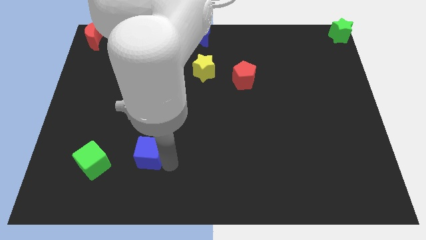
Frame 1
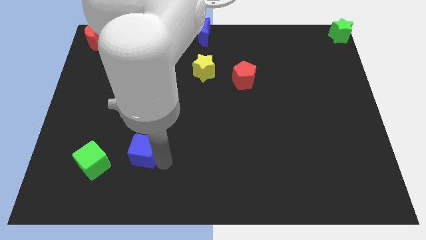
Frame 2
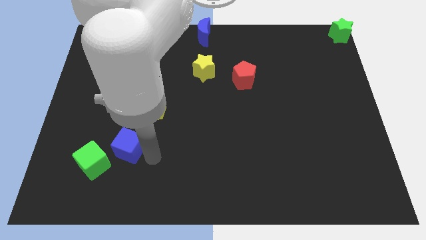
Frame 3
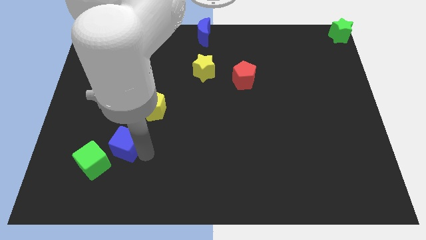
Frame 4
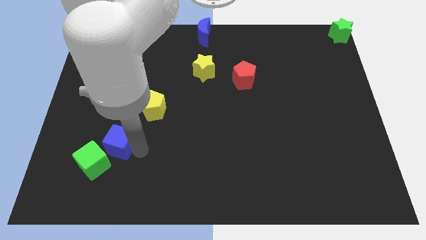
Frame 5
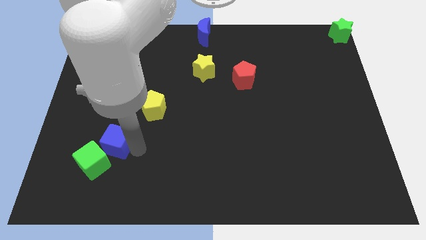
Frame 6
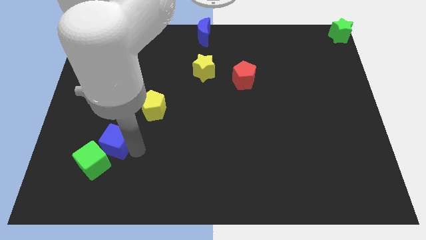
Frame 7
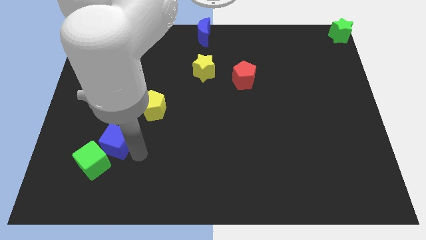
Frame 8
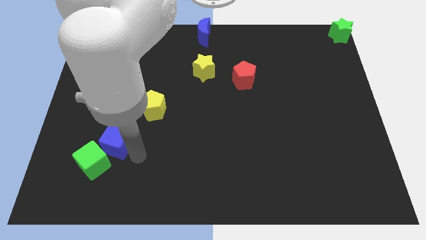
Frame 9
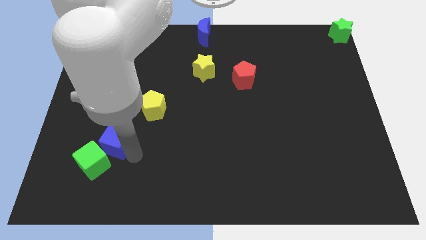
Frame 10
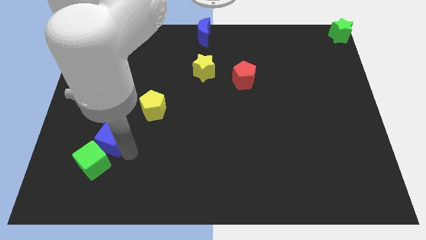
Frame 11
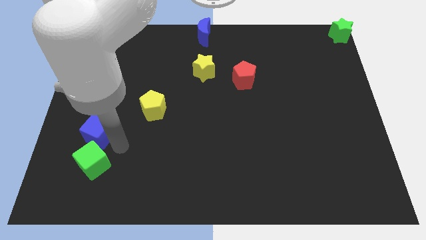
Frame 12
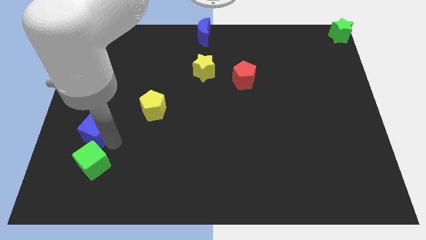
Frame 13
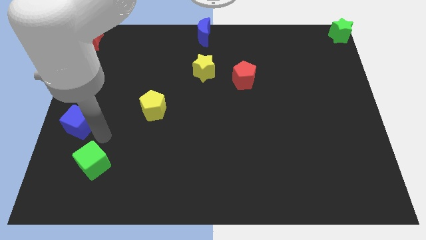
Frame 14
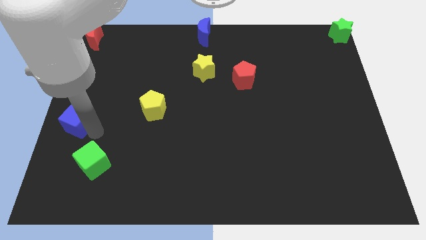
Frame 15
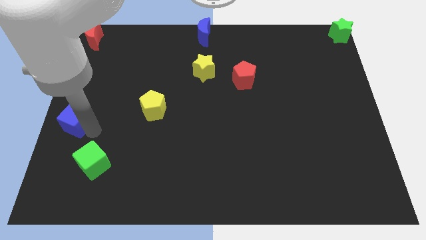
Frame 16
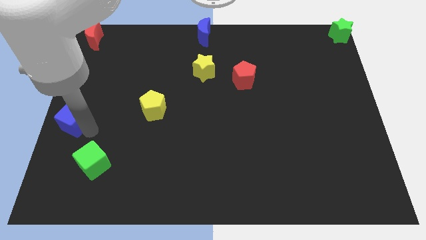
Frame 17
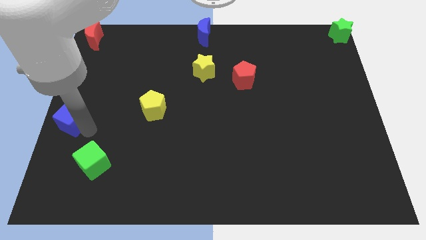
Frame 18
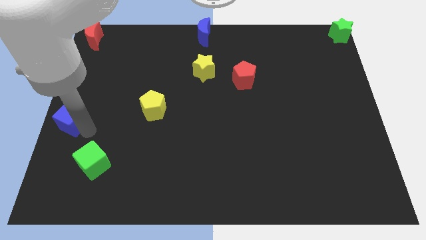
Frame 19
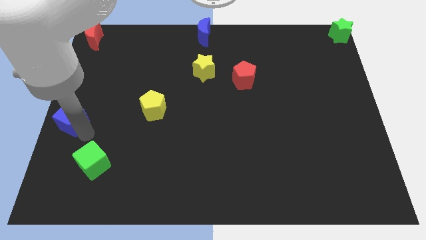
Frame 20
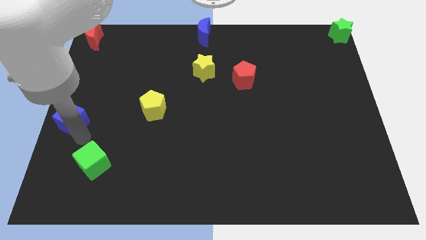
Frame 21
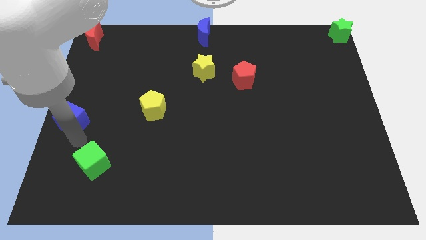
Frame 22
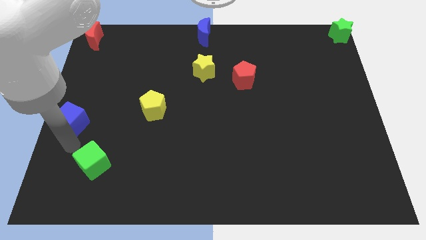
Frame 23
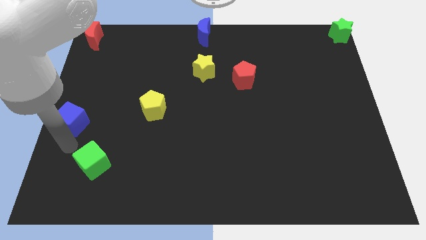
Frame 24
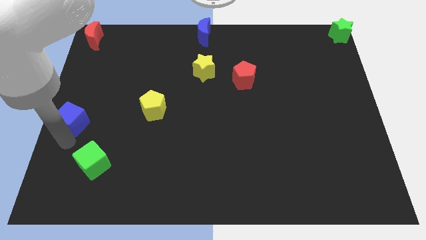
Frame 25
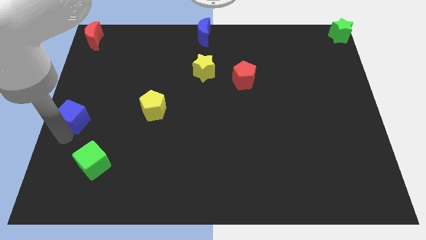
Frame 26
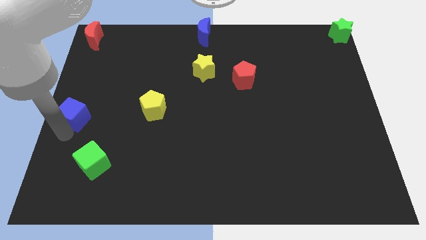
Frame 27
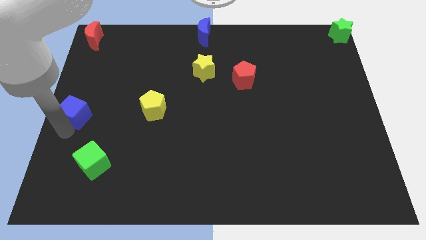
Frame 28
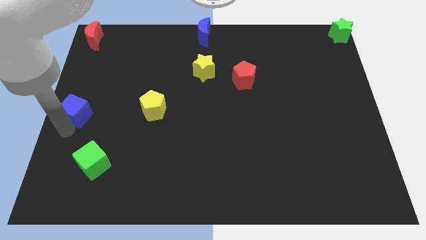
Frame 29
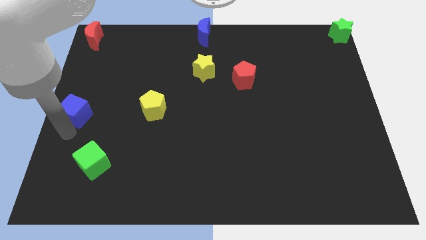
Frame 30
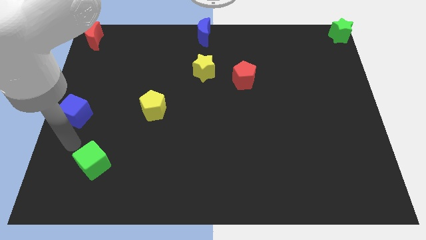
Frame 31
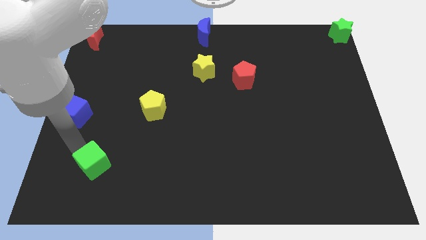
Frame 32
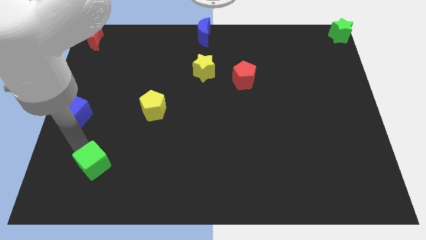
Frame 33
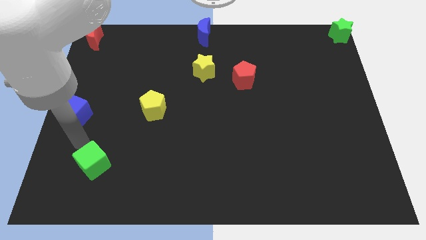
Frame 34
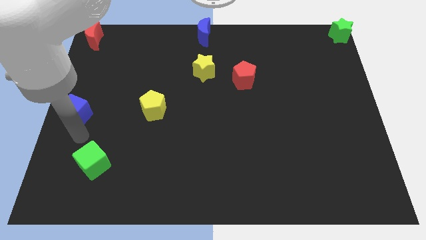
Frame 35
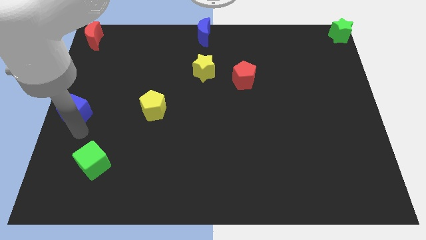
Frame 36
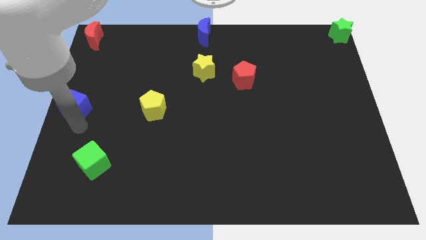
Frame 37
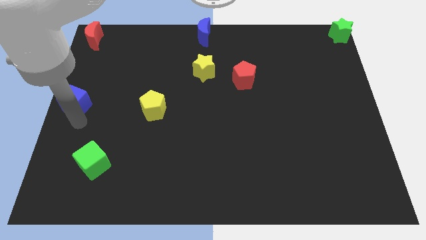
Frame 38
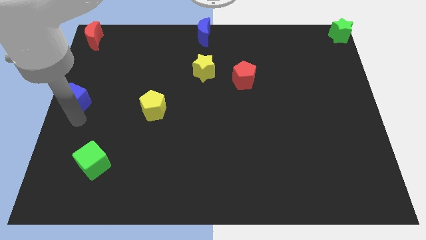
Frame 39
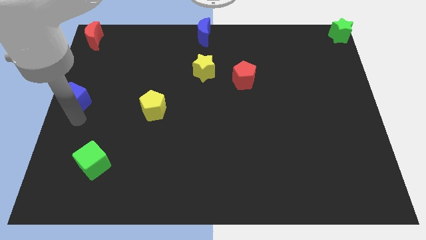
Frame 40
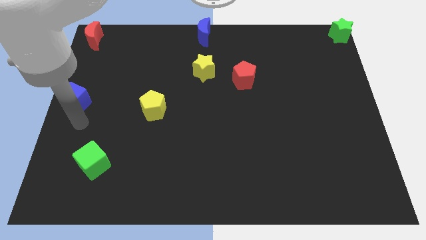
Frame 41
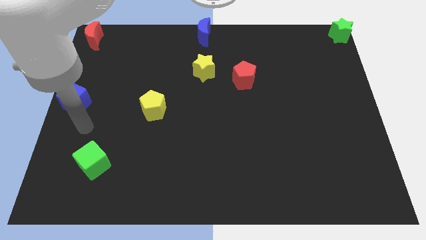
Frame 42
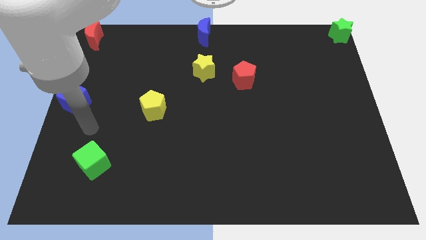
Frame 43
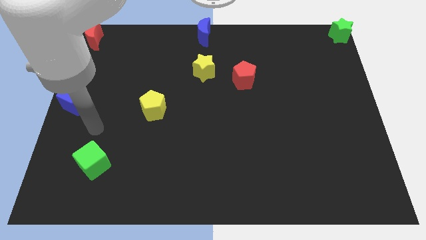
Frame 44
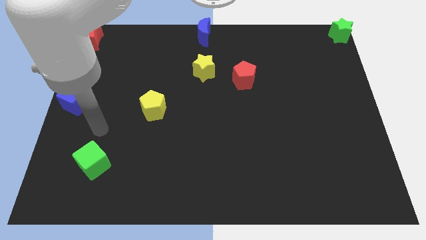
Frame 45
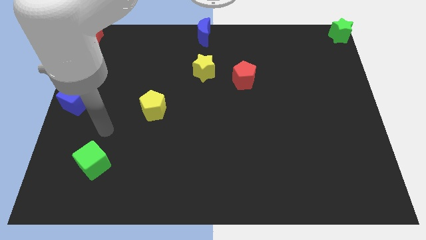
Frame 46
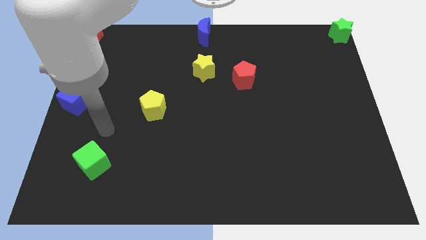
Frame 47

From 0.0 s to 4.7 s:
drag the blue cube to the center left of the board

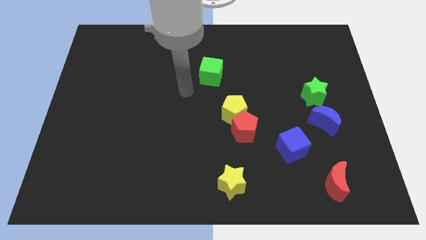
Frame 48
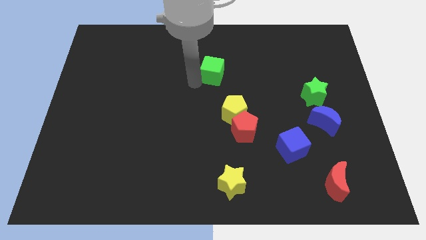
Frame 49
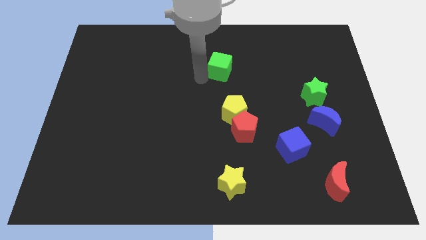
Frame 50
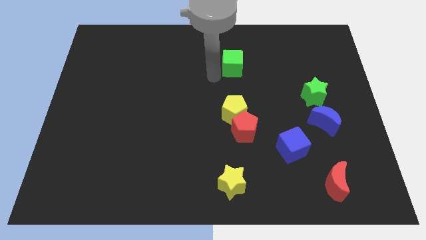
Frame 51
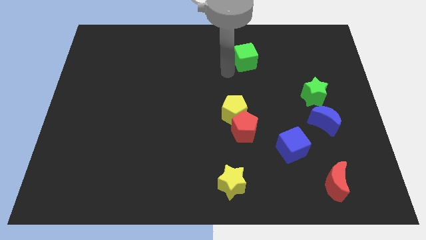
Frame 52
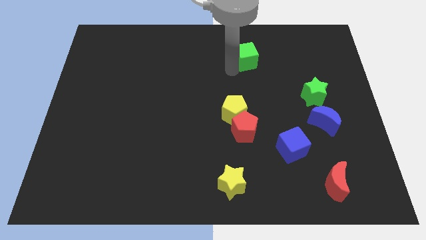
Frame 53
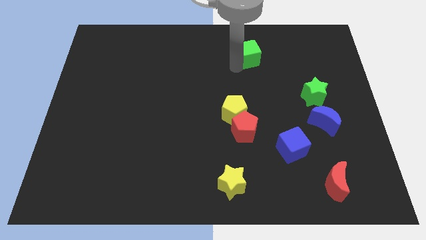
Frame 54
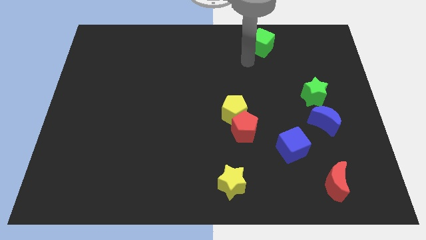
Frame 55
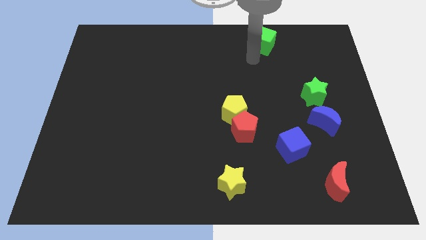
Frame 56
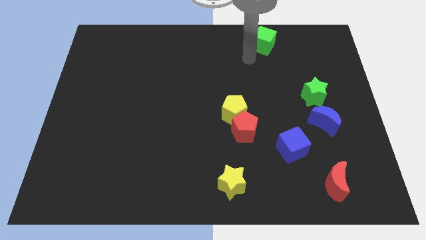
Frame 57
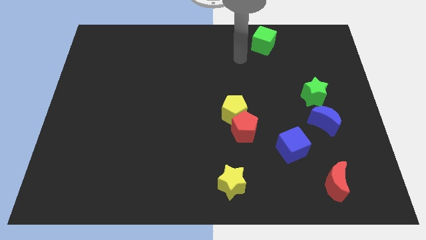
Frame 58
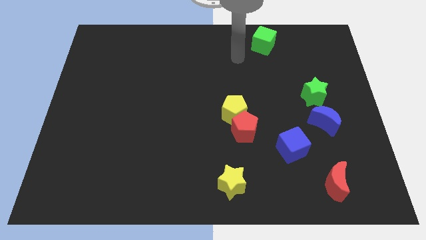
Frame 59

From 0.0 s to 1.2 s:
move the green cube to the top right of the board

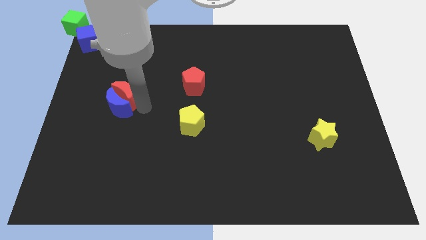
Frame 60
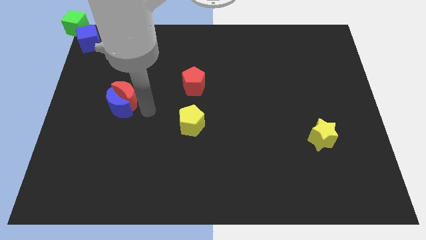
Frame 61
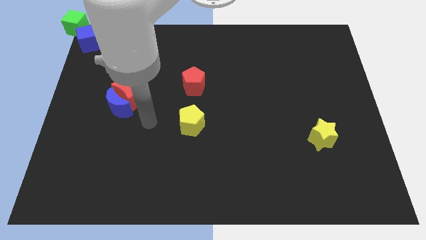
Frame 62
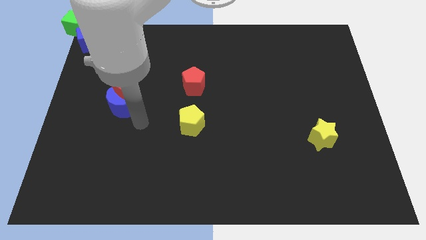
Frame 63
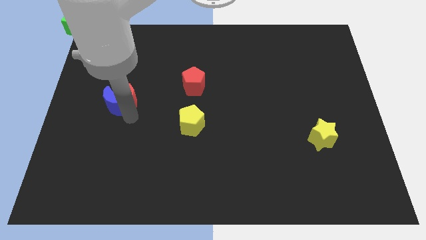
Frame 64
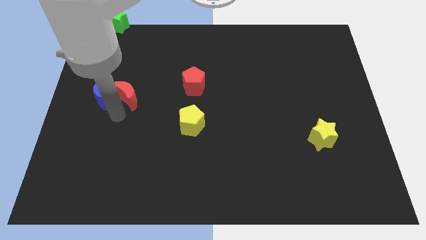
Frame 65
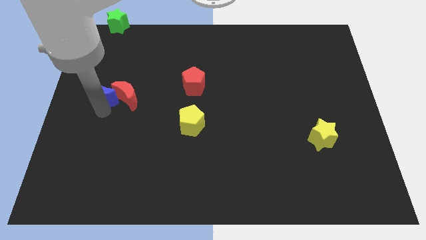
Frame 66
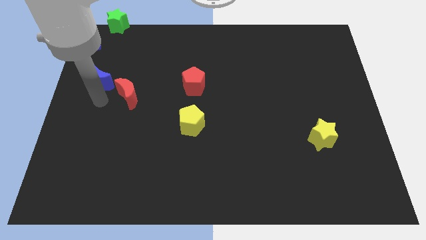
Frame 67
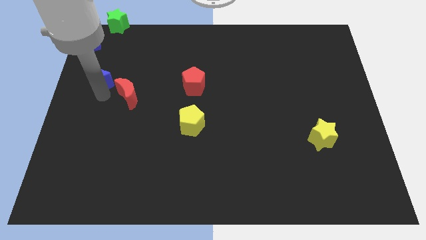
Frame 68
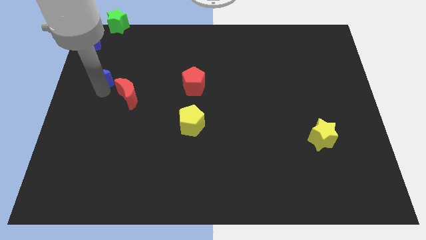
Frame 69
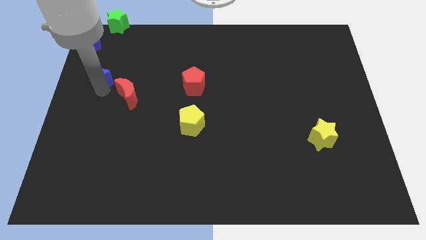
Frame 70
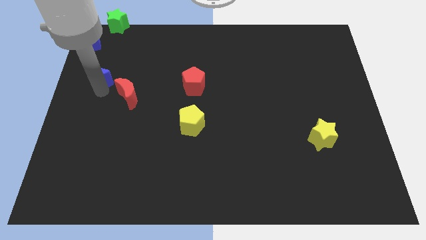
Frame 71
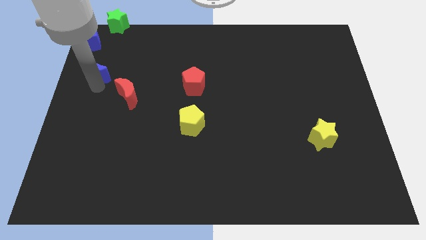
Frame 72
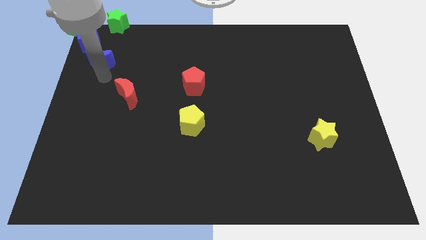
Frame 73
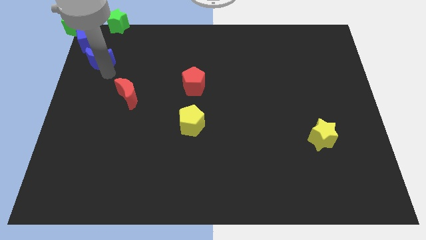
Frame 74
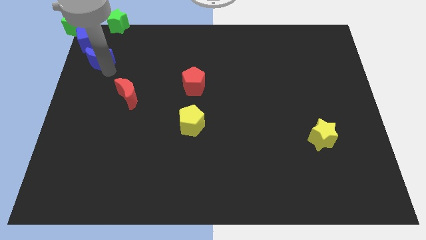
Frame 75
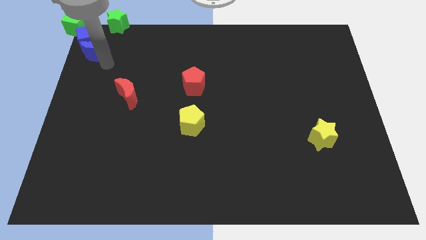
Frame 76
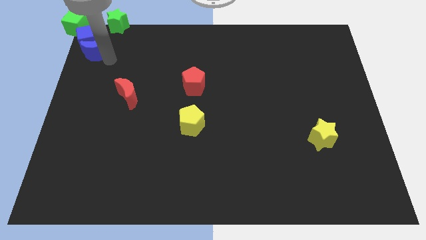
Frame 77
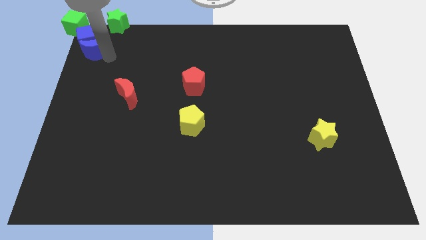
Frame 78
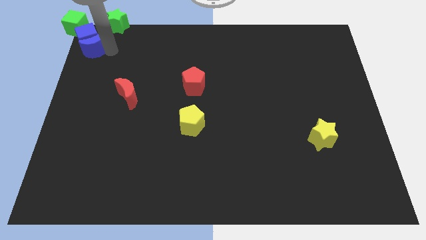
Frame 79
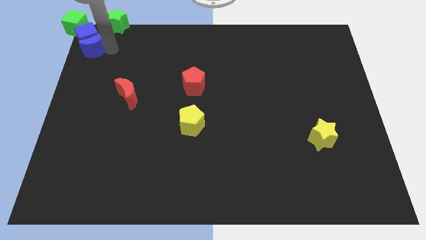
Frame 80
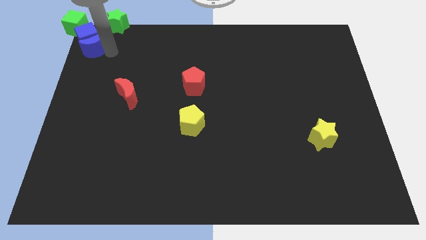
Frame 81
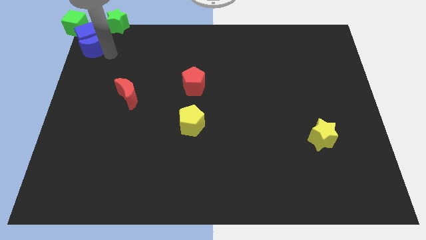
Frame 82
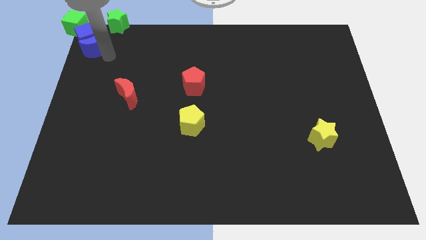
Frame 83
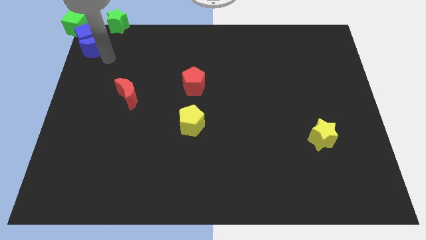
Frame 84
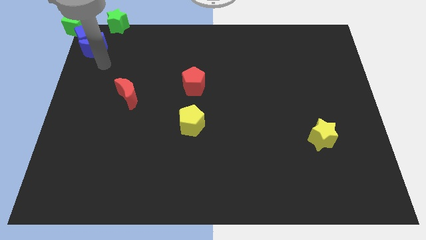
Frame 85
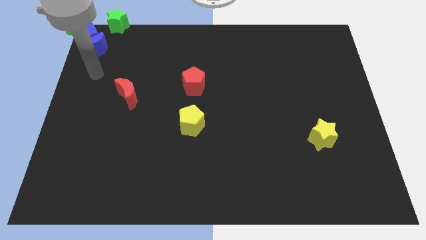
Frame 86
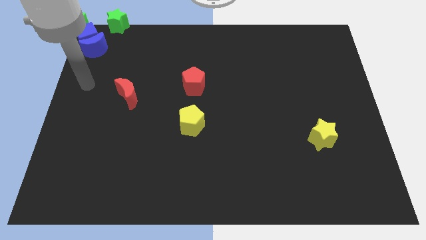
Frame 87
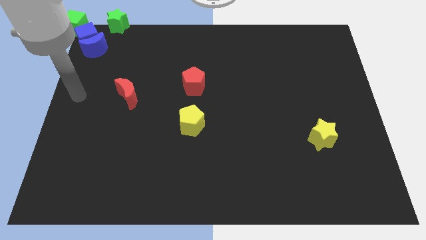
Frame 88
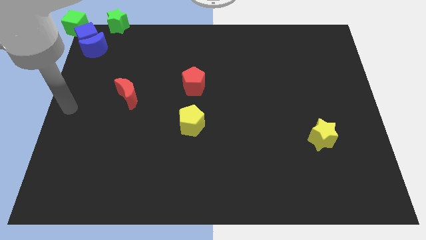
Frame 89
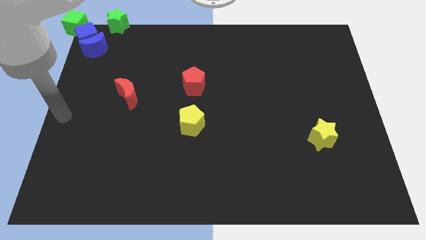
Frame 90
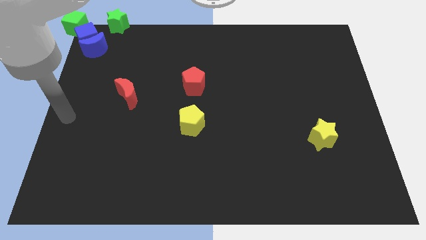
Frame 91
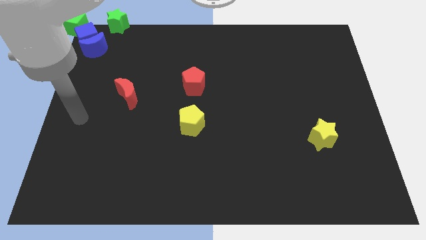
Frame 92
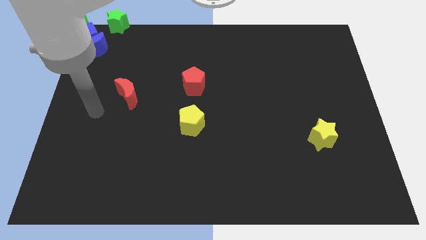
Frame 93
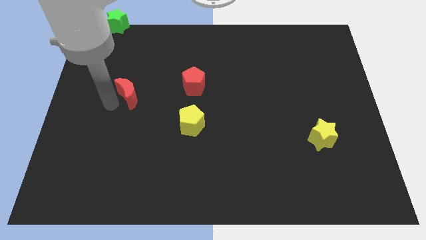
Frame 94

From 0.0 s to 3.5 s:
push the blue crescent to the bottom side of the blue cube
